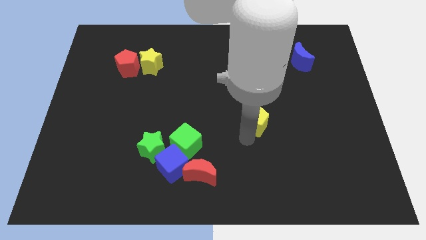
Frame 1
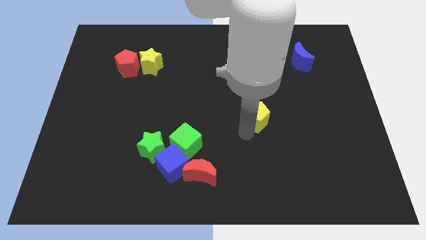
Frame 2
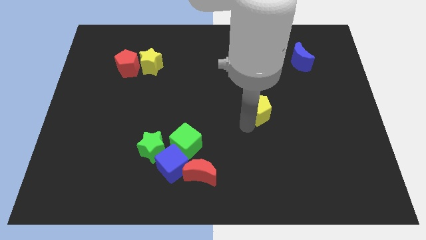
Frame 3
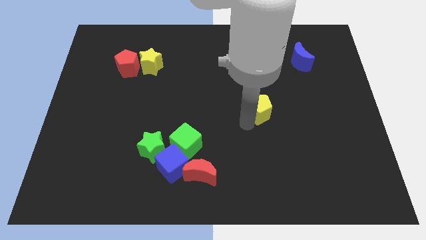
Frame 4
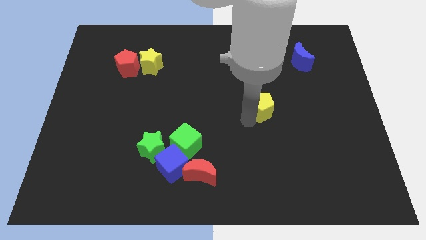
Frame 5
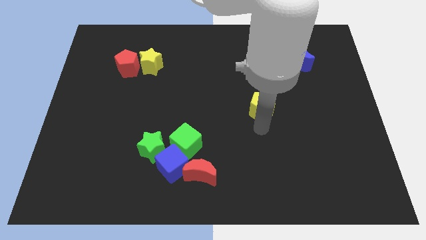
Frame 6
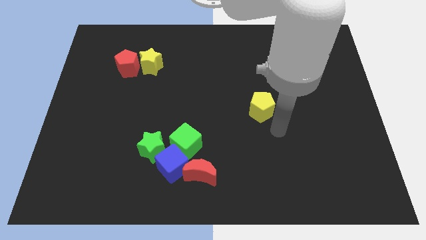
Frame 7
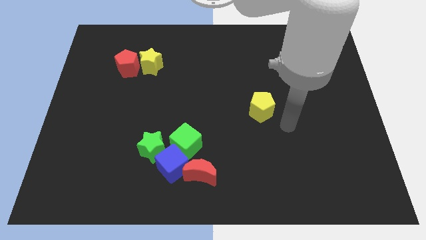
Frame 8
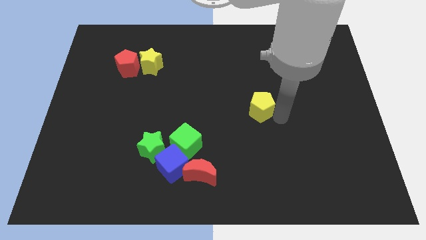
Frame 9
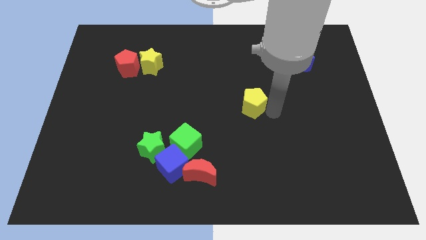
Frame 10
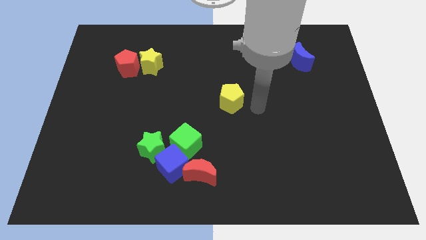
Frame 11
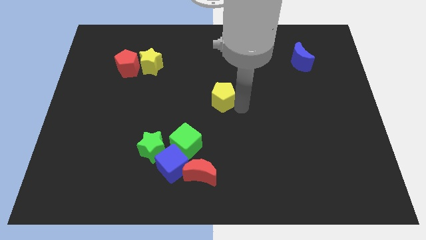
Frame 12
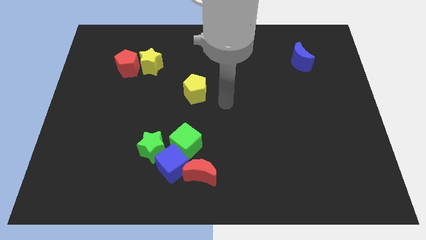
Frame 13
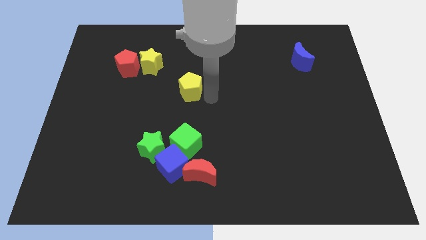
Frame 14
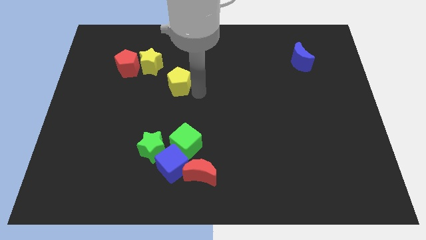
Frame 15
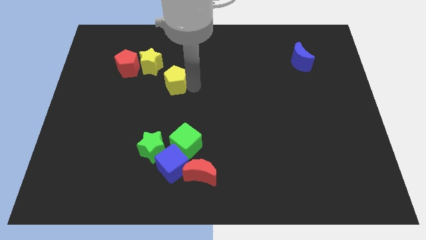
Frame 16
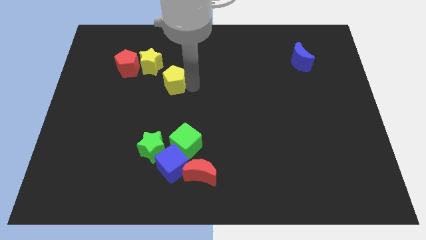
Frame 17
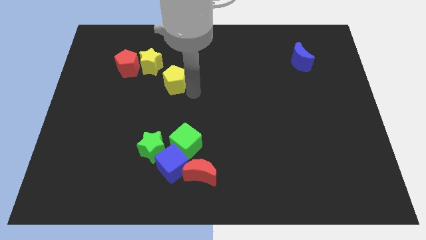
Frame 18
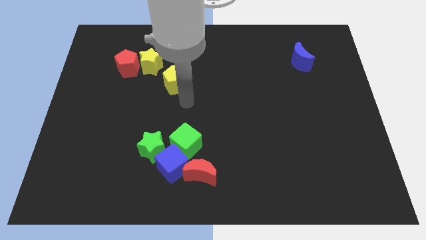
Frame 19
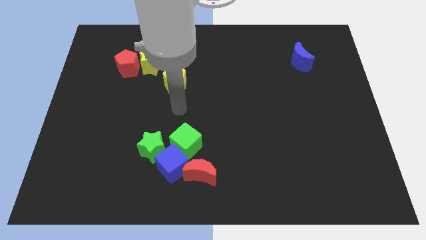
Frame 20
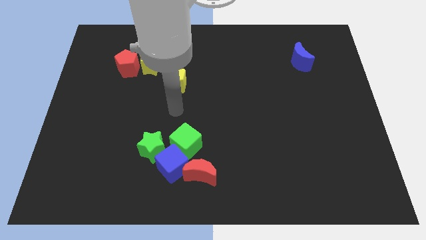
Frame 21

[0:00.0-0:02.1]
move the yellow pentagon to the bottom right of the yellow star

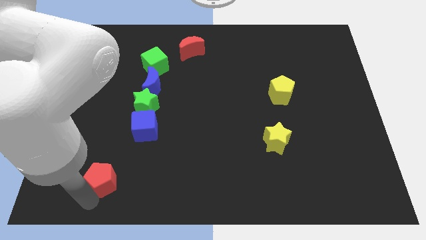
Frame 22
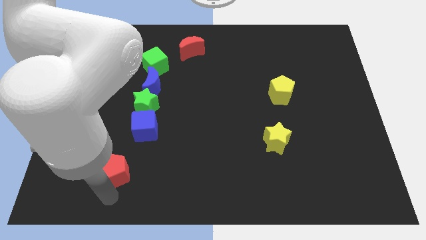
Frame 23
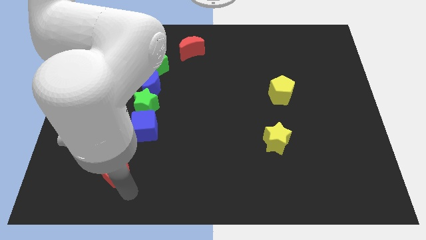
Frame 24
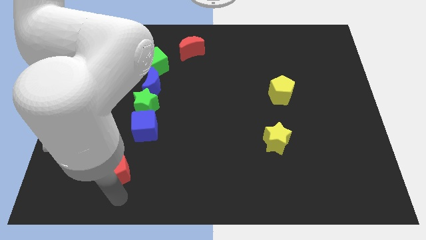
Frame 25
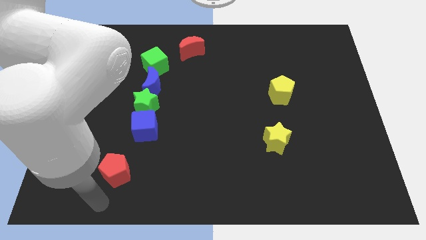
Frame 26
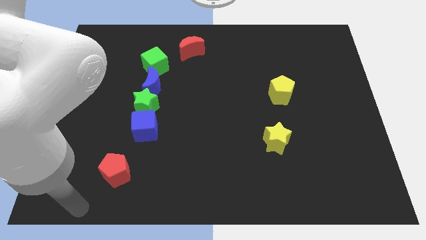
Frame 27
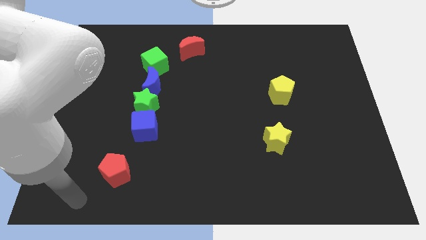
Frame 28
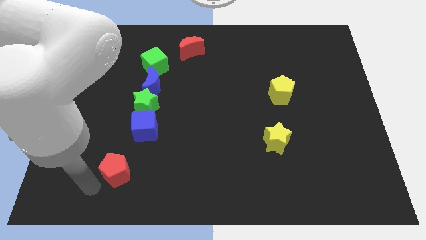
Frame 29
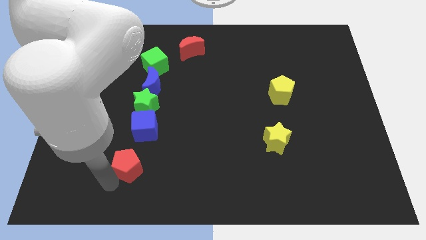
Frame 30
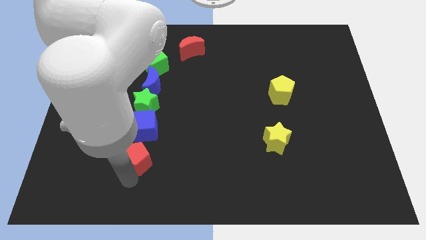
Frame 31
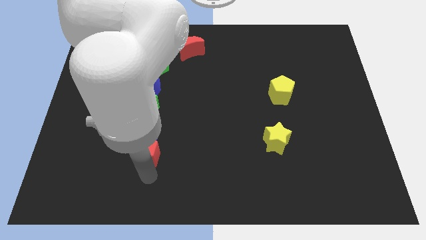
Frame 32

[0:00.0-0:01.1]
move the red pentagon below the blue cube

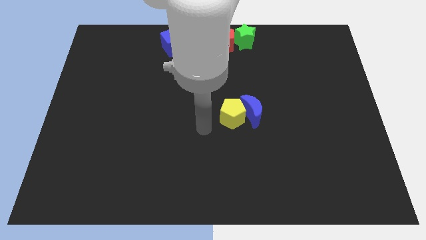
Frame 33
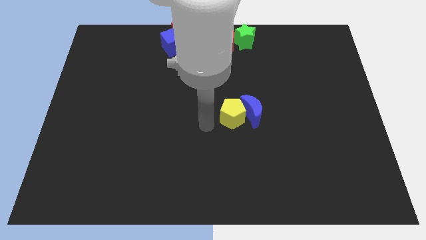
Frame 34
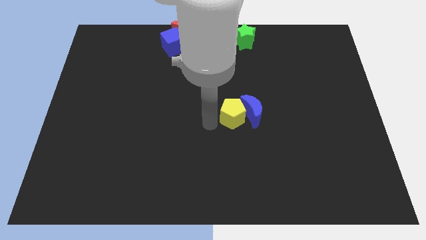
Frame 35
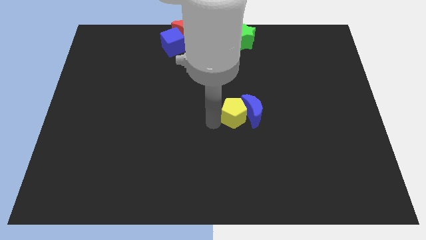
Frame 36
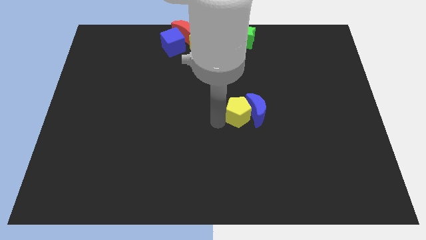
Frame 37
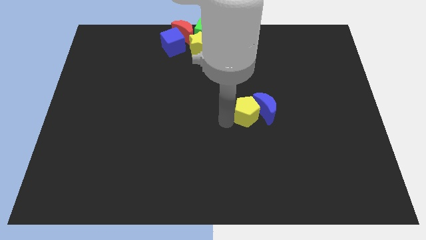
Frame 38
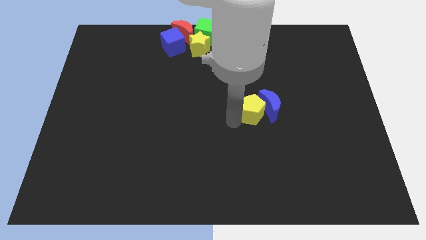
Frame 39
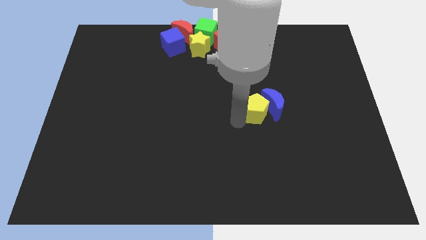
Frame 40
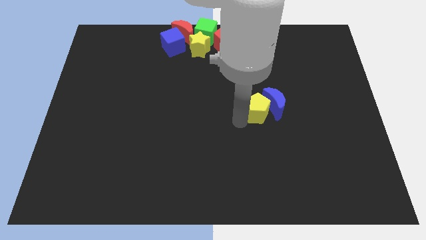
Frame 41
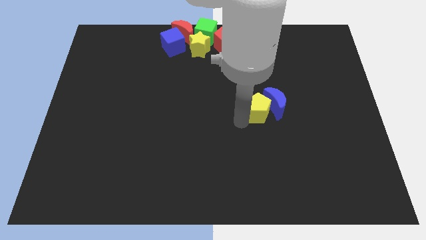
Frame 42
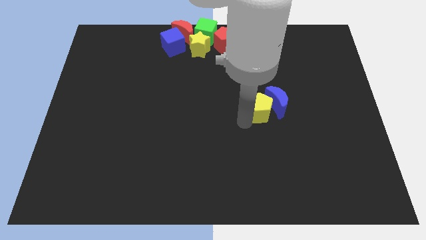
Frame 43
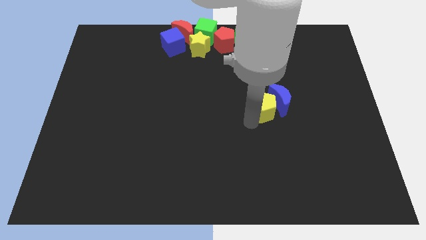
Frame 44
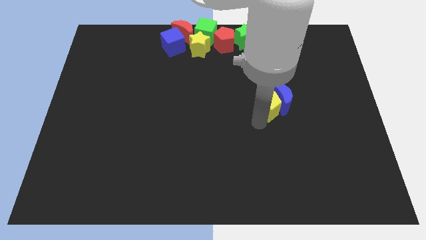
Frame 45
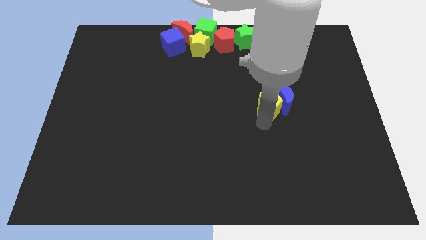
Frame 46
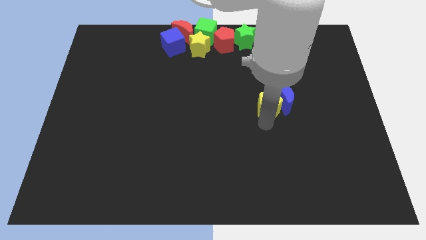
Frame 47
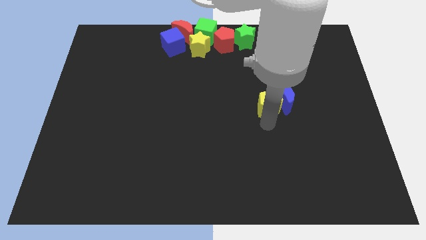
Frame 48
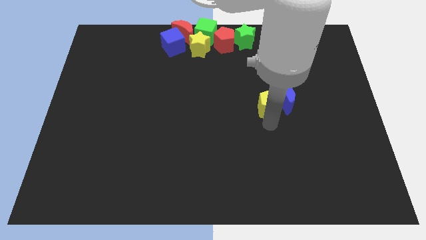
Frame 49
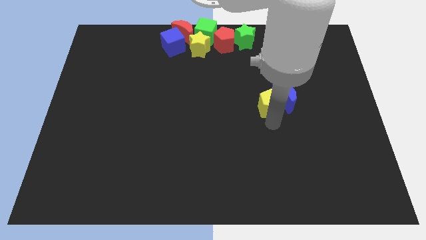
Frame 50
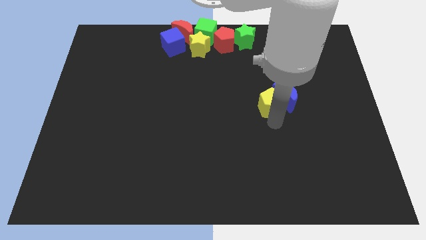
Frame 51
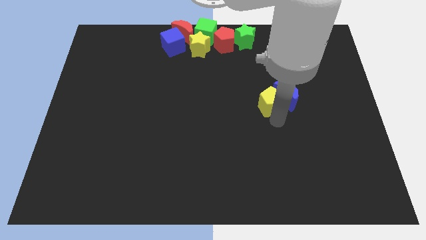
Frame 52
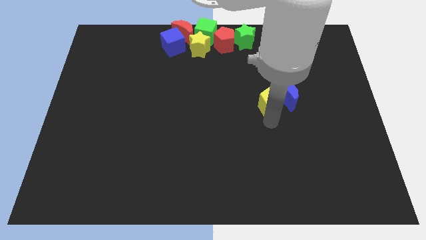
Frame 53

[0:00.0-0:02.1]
push the yellow pentagon along with the blue moon towards the center right side of the board

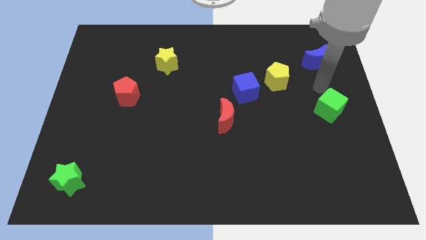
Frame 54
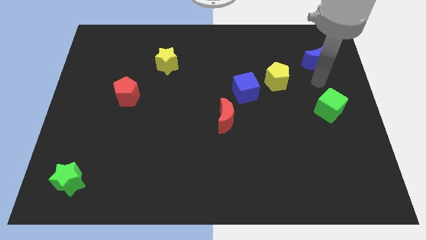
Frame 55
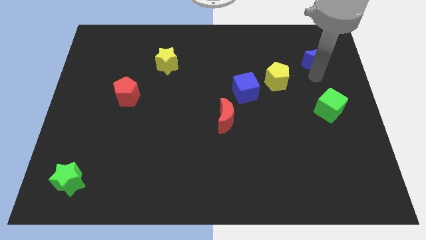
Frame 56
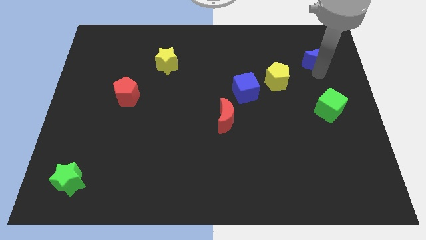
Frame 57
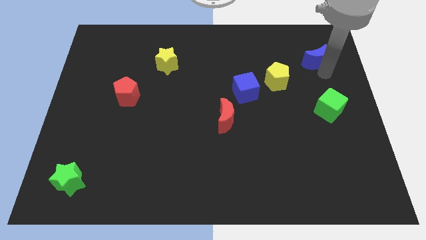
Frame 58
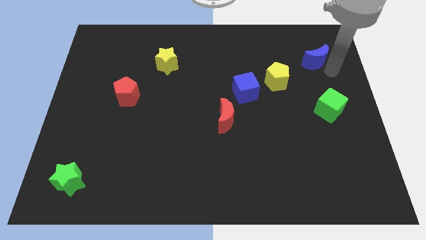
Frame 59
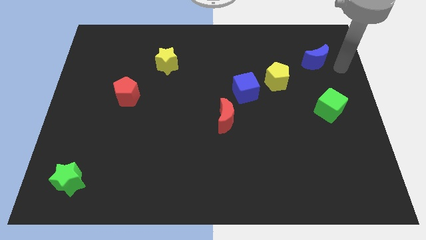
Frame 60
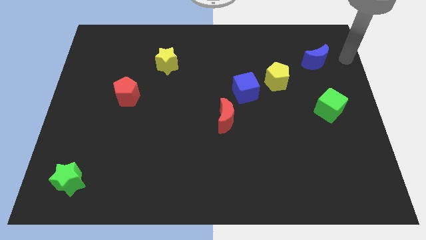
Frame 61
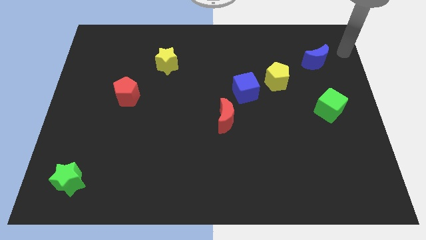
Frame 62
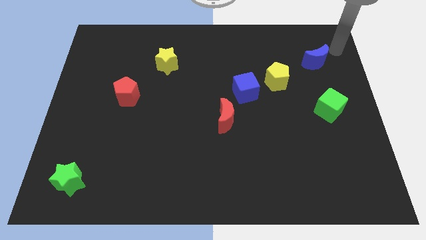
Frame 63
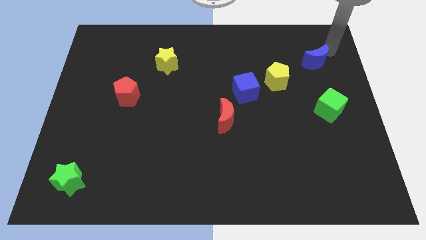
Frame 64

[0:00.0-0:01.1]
move arm to the blue moon

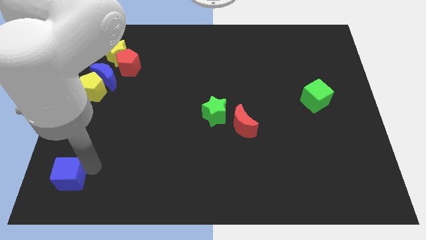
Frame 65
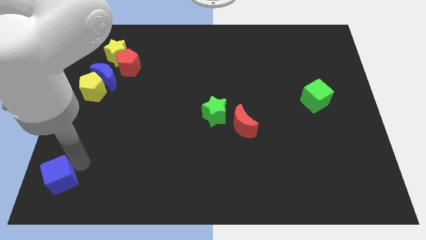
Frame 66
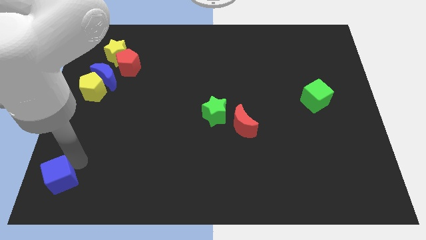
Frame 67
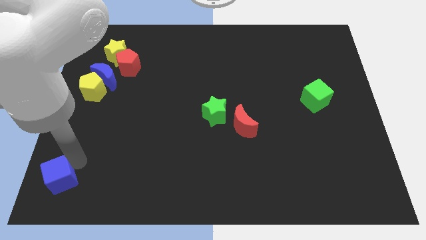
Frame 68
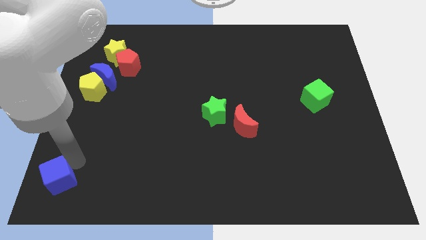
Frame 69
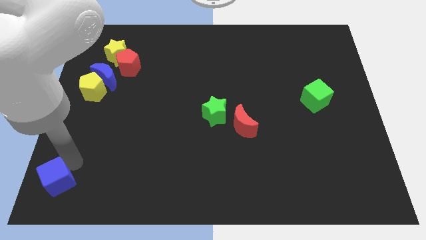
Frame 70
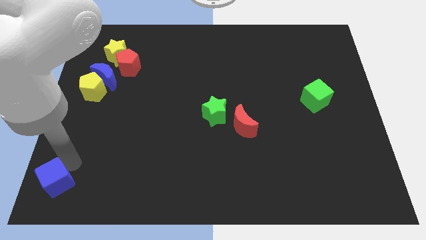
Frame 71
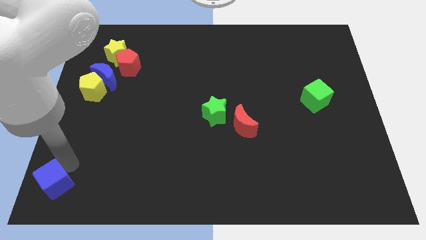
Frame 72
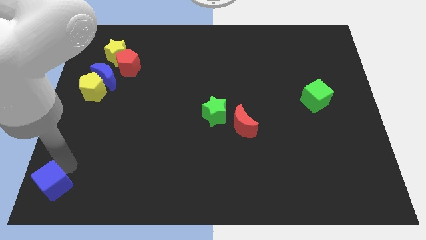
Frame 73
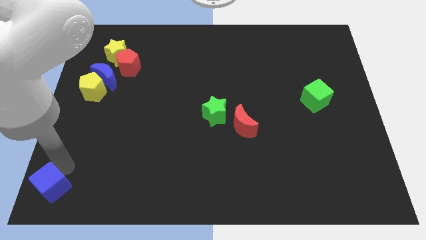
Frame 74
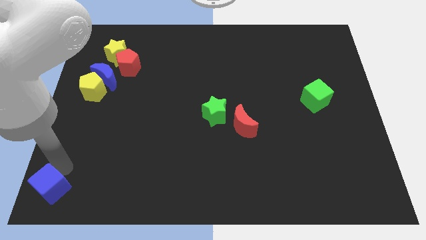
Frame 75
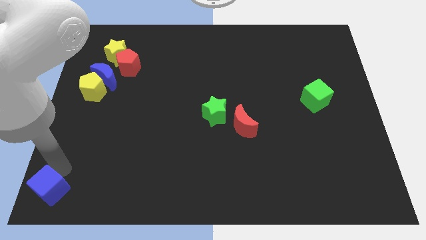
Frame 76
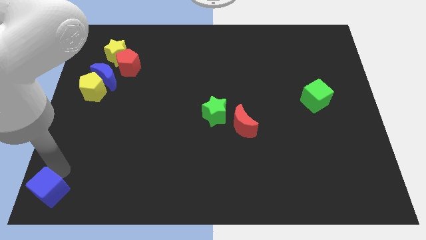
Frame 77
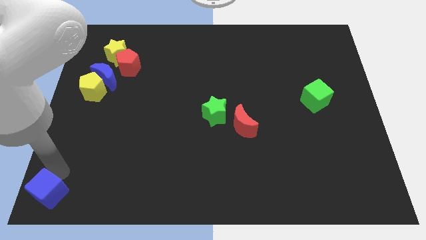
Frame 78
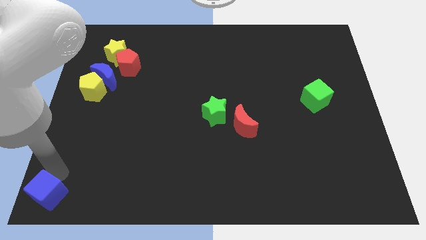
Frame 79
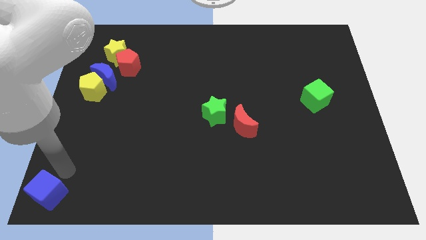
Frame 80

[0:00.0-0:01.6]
slide the blue cube to the bottom left corner of the board

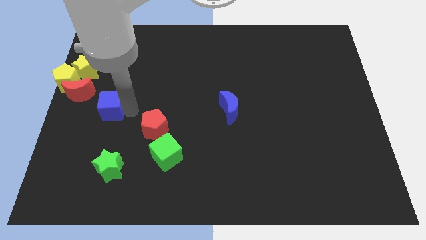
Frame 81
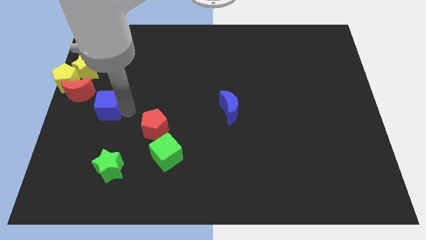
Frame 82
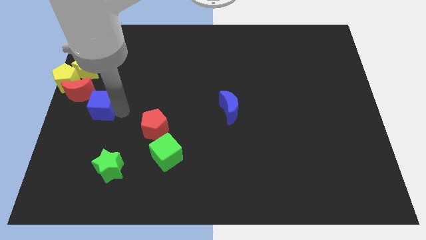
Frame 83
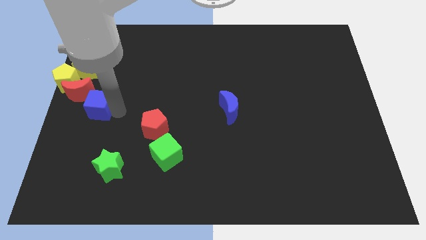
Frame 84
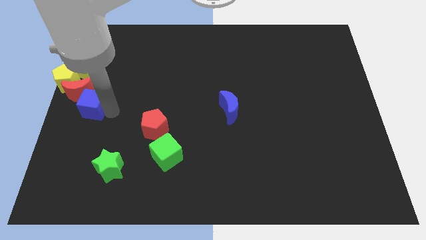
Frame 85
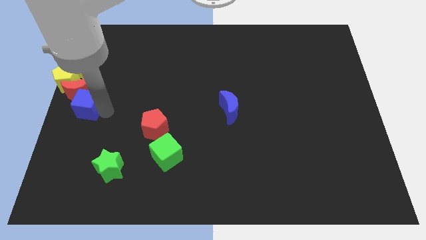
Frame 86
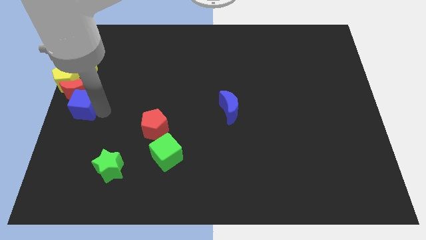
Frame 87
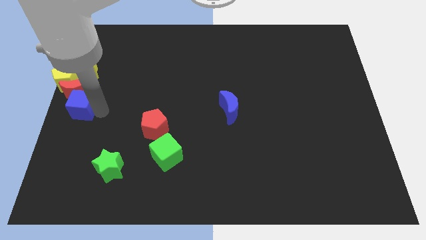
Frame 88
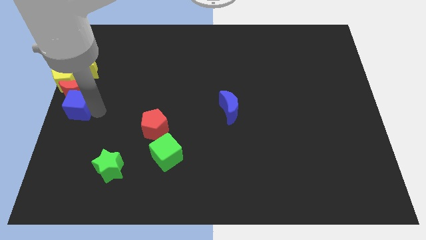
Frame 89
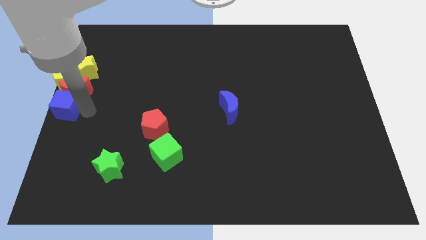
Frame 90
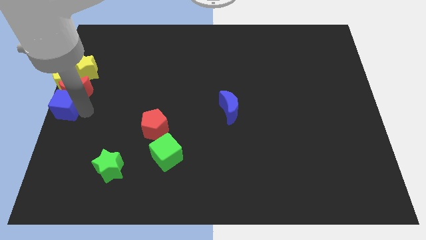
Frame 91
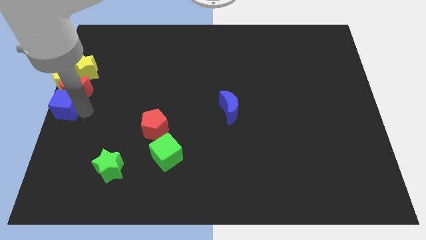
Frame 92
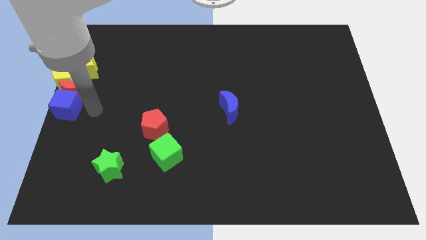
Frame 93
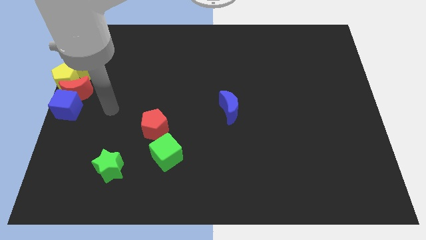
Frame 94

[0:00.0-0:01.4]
drag the blue cube to the bottom of the red moon
